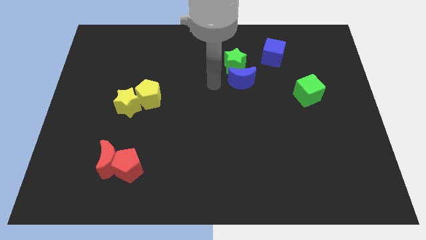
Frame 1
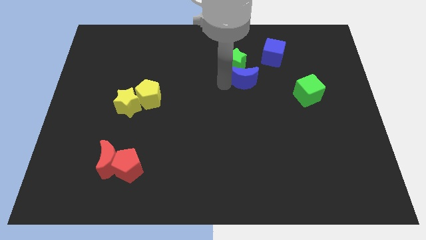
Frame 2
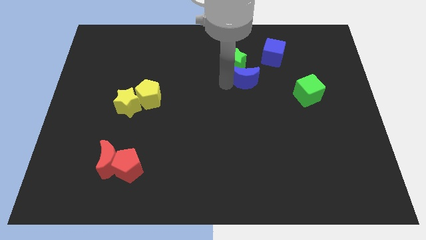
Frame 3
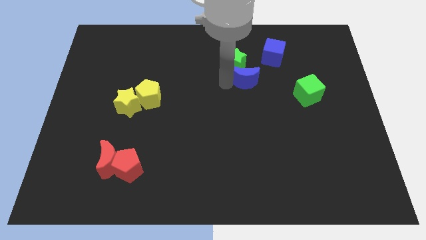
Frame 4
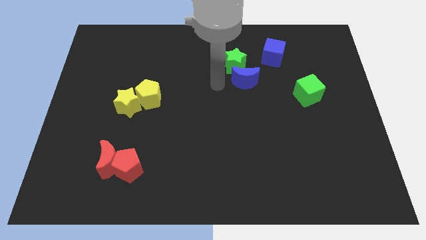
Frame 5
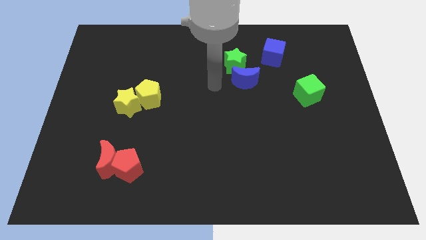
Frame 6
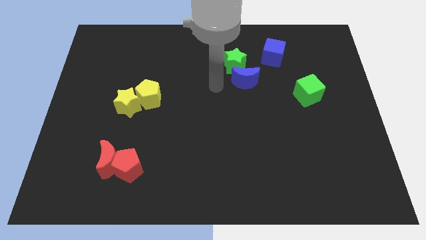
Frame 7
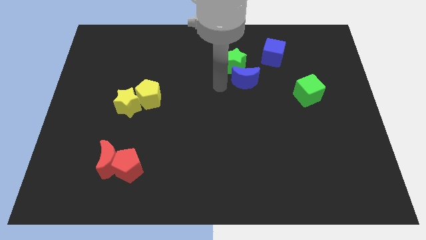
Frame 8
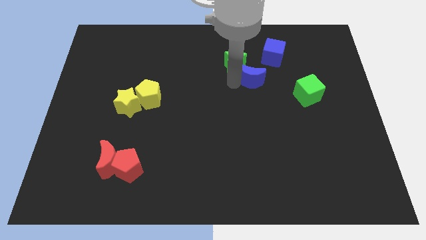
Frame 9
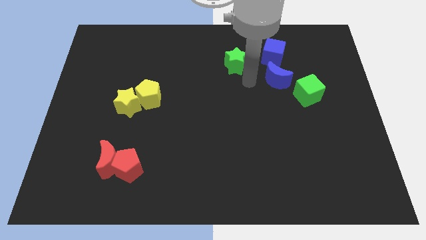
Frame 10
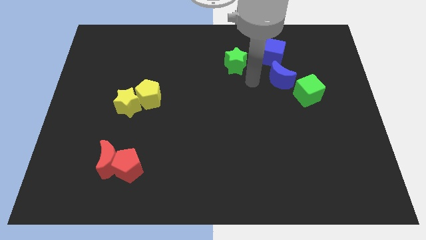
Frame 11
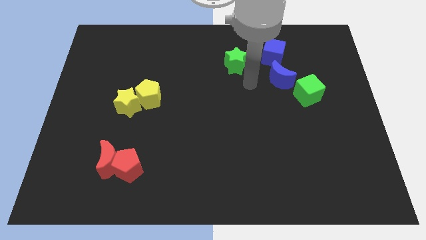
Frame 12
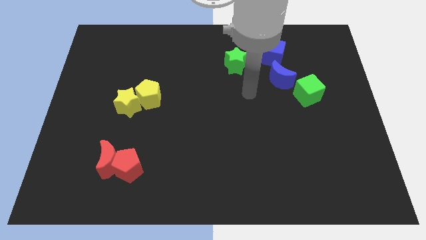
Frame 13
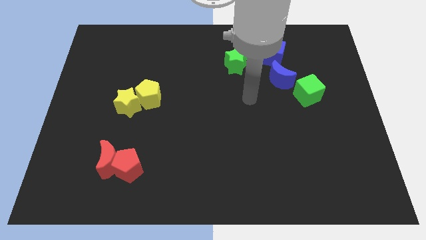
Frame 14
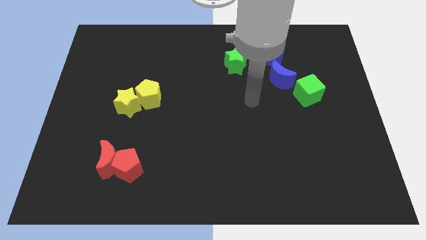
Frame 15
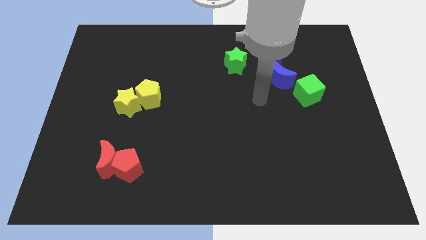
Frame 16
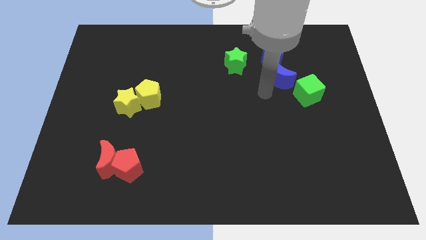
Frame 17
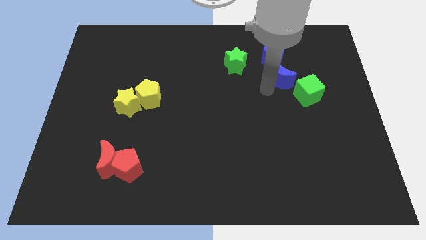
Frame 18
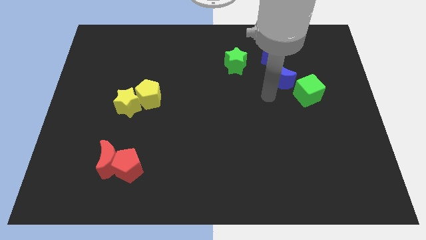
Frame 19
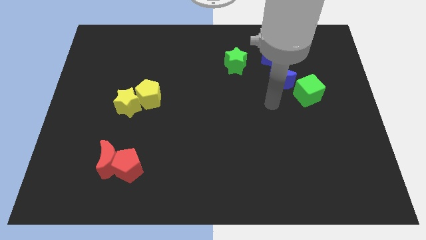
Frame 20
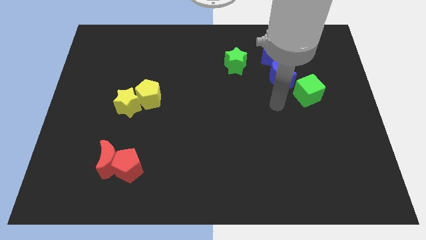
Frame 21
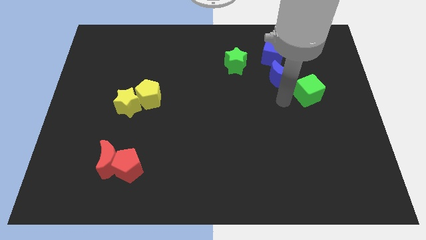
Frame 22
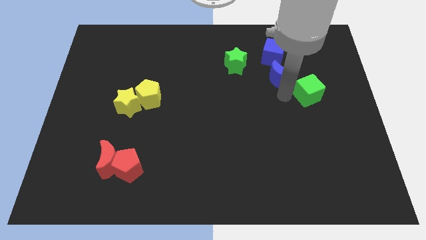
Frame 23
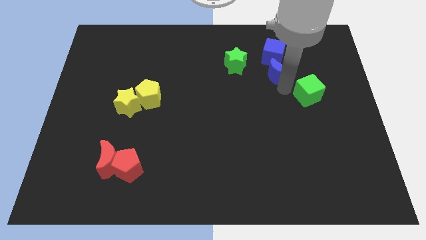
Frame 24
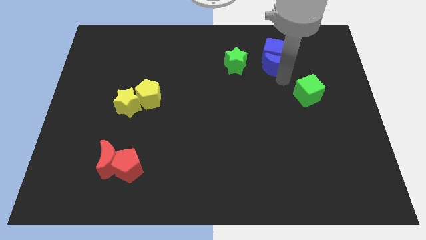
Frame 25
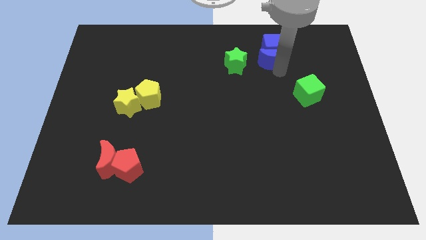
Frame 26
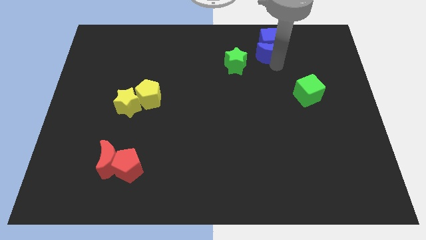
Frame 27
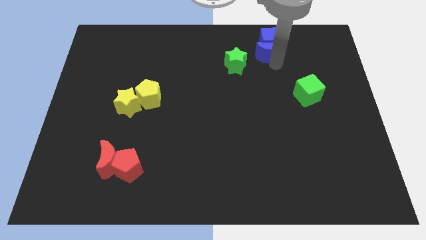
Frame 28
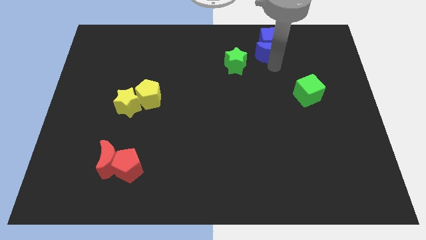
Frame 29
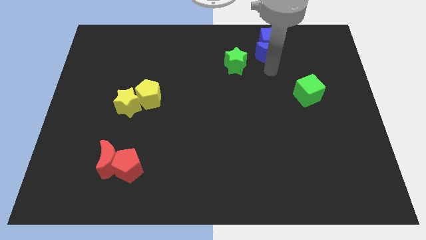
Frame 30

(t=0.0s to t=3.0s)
move the blue crescent into the blue cube

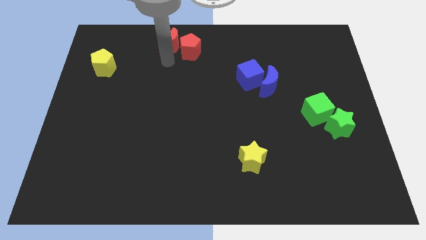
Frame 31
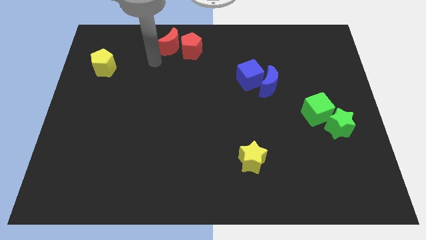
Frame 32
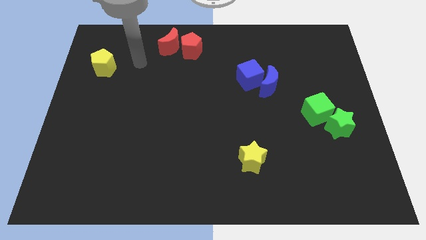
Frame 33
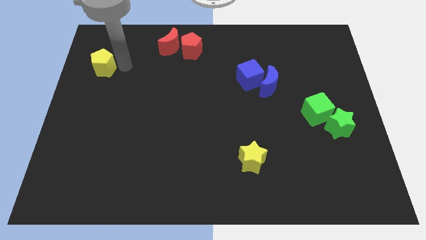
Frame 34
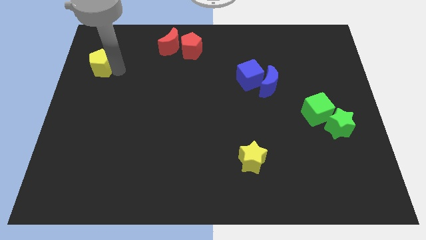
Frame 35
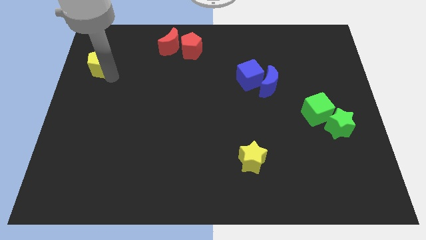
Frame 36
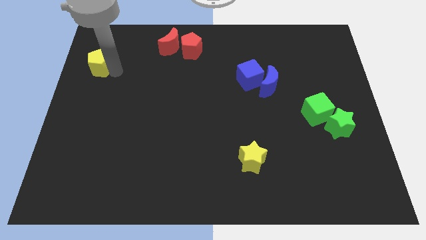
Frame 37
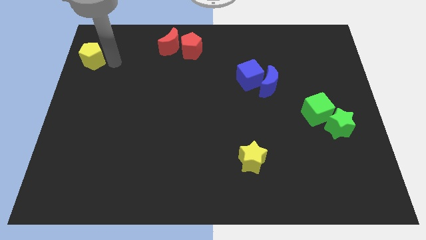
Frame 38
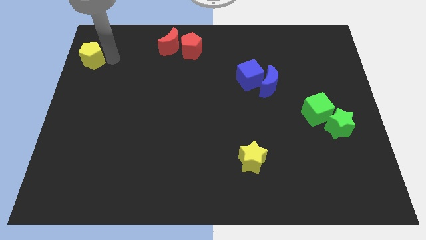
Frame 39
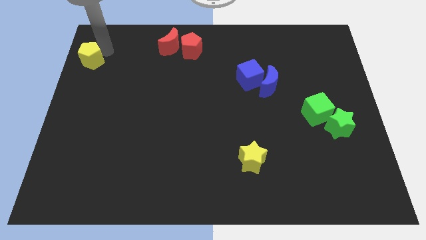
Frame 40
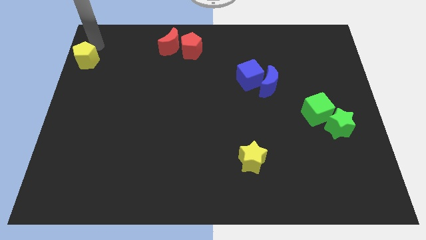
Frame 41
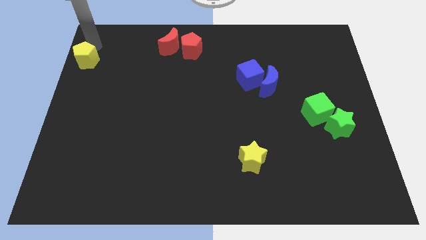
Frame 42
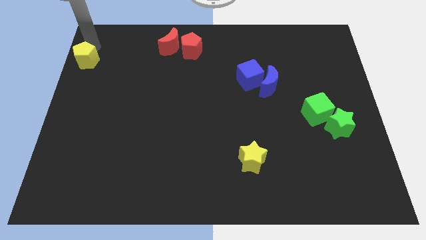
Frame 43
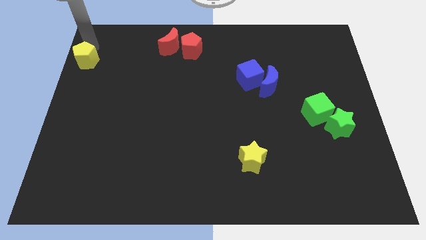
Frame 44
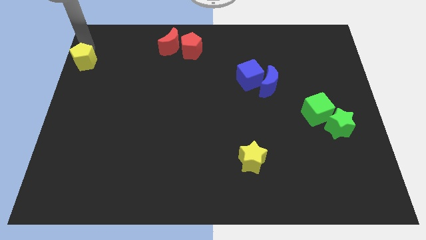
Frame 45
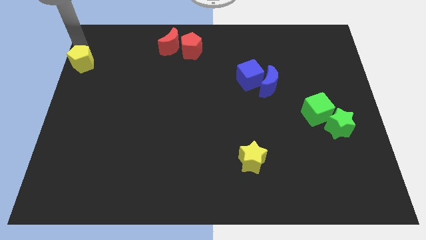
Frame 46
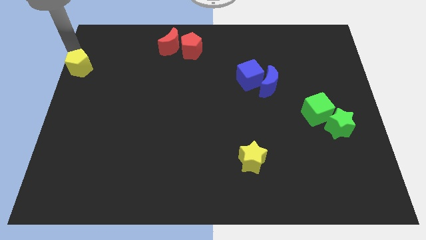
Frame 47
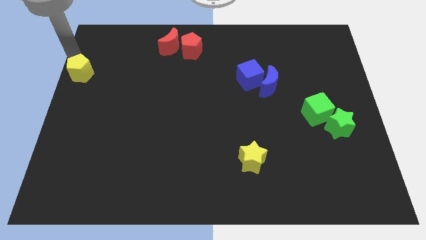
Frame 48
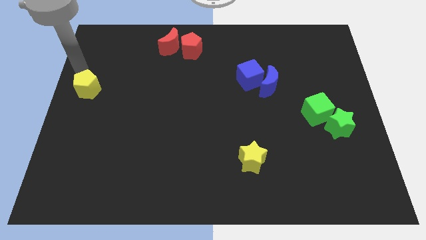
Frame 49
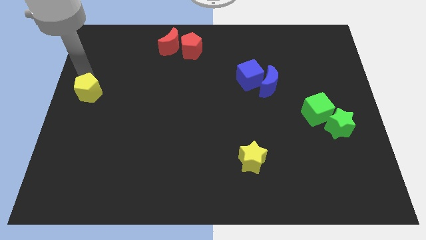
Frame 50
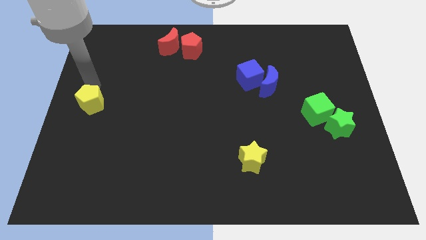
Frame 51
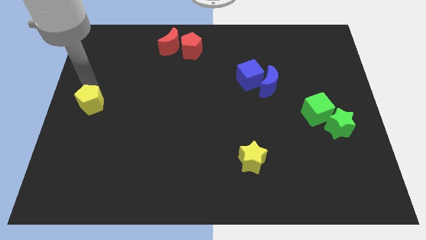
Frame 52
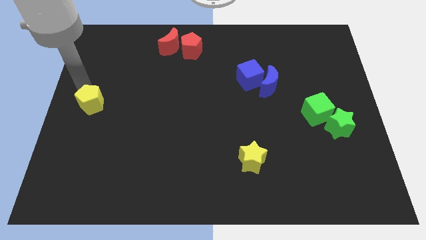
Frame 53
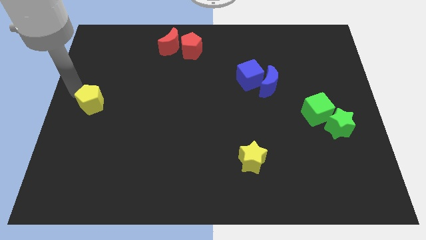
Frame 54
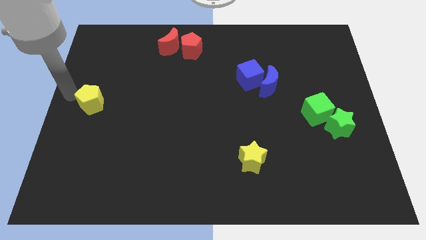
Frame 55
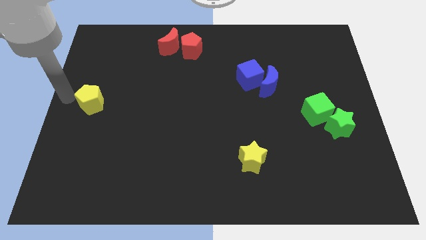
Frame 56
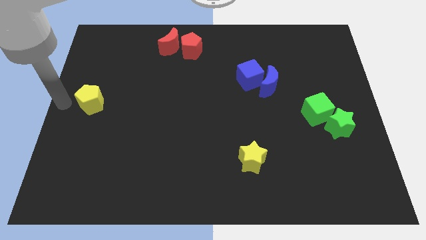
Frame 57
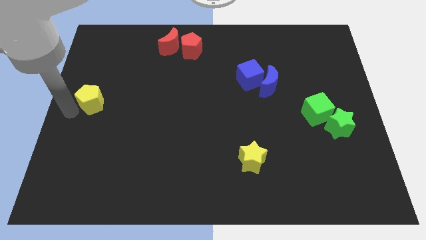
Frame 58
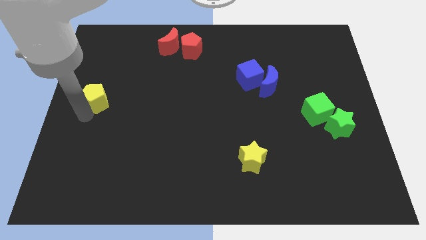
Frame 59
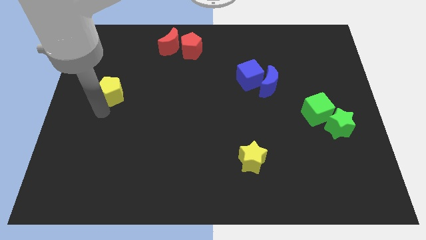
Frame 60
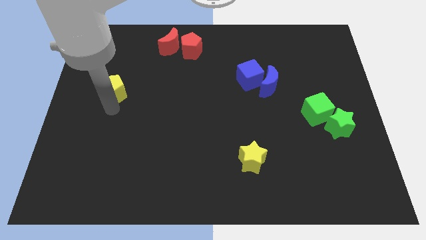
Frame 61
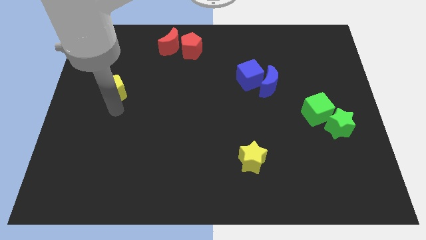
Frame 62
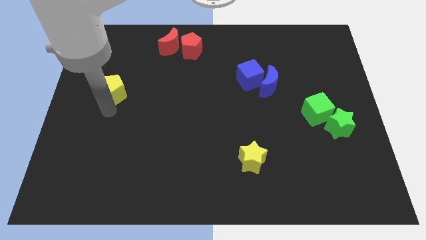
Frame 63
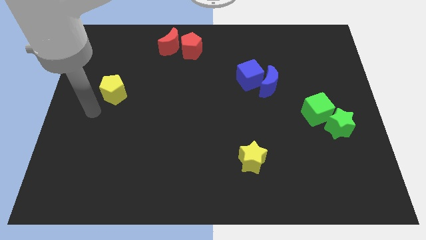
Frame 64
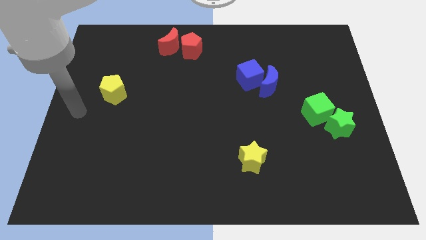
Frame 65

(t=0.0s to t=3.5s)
move the yellow pentagon parallel to blue blocks

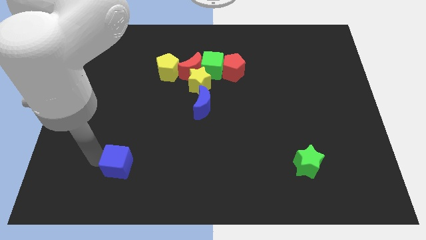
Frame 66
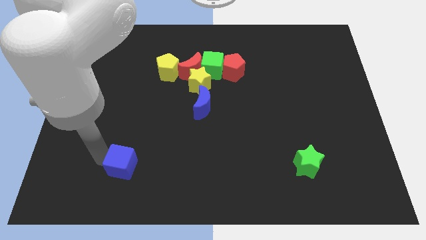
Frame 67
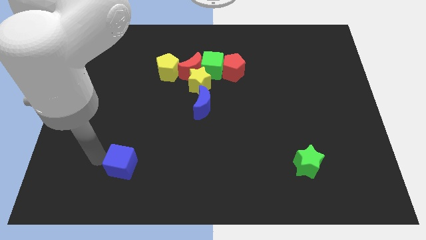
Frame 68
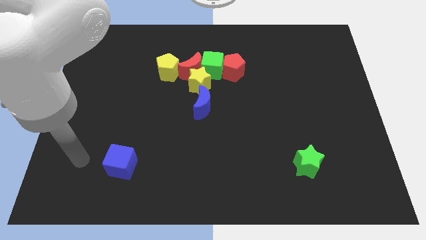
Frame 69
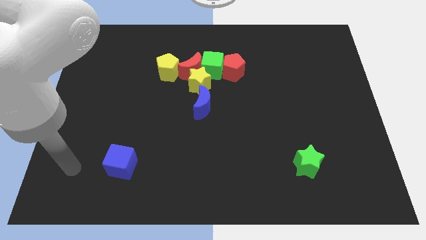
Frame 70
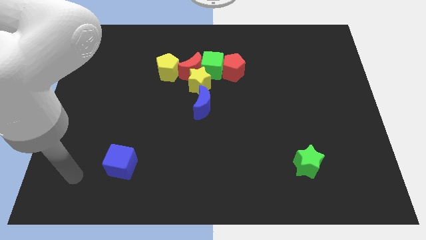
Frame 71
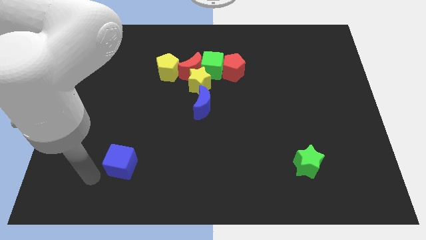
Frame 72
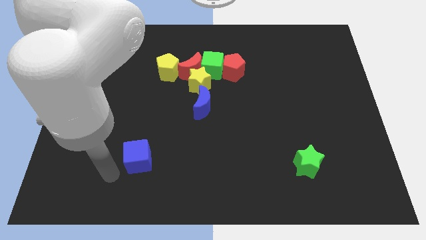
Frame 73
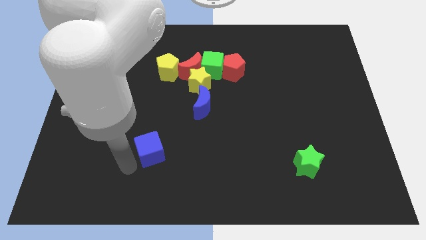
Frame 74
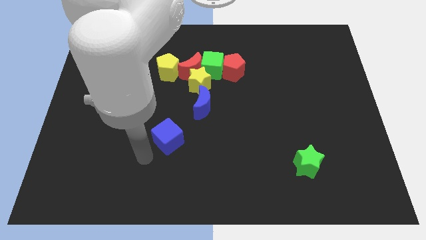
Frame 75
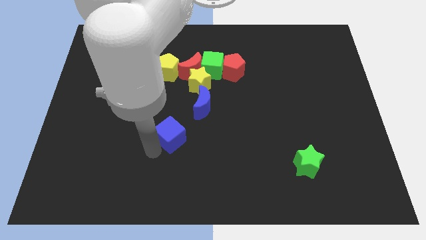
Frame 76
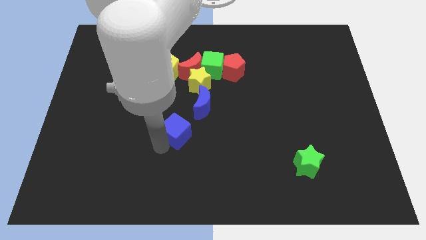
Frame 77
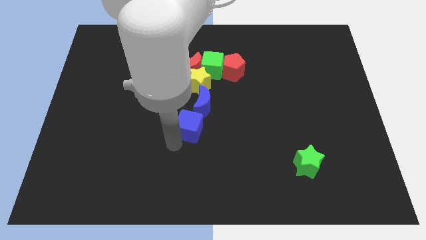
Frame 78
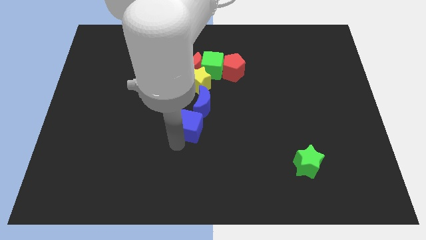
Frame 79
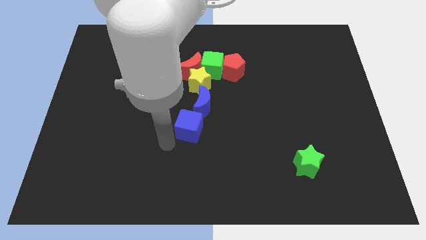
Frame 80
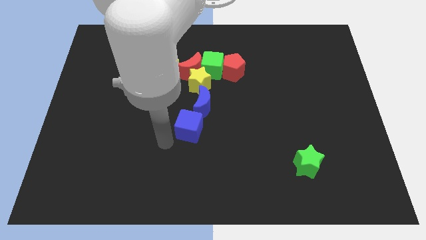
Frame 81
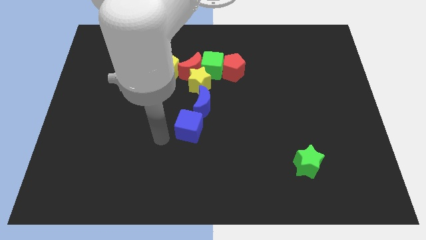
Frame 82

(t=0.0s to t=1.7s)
push the blue cube into blue moon

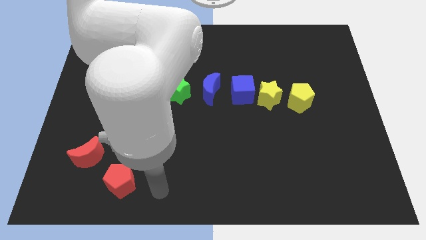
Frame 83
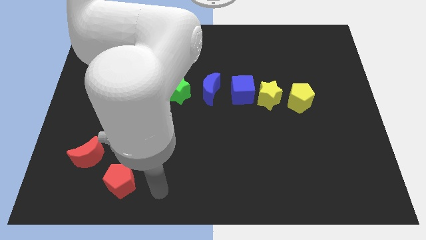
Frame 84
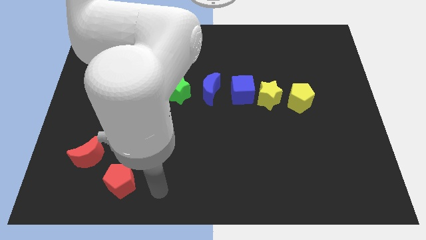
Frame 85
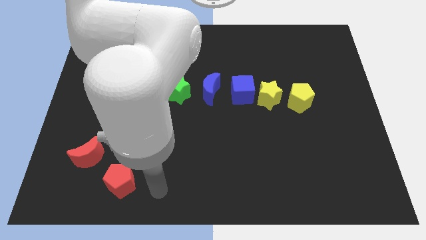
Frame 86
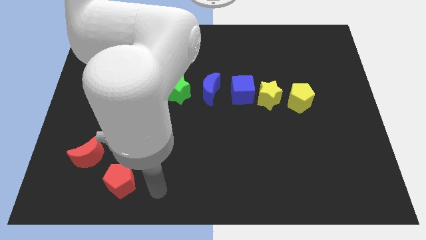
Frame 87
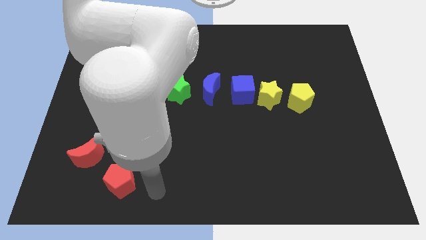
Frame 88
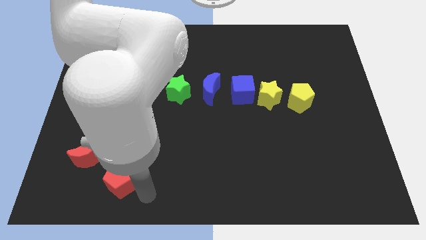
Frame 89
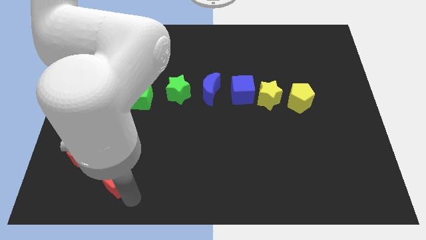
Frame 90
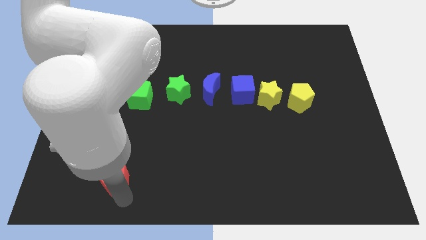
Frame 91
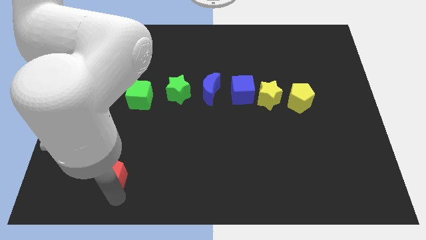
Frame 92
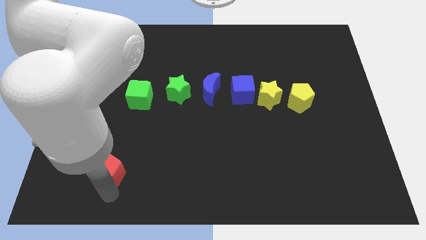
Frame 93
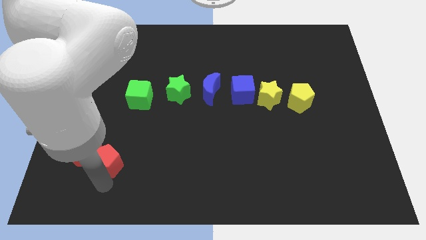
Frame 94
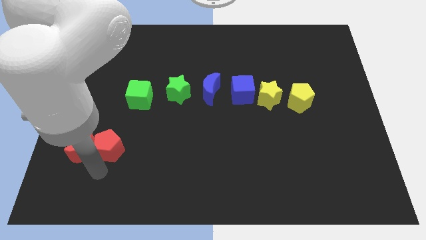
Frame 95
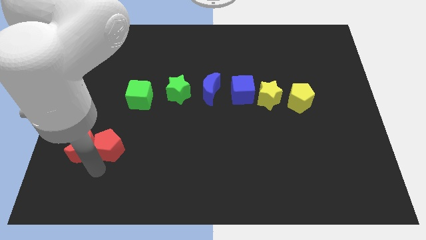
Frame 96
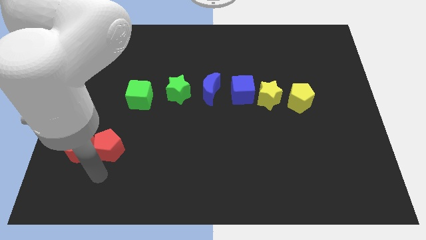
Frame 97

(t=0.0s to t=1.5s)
push the red pentagon into the red moon
